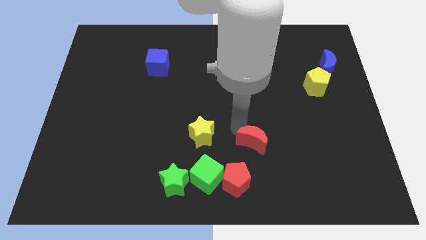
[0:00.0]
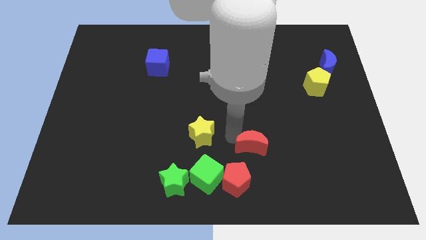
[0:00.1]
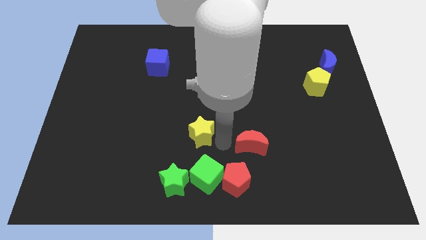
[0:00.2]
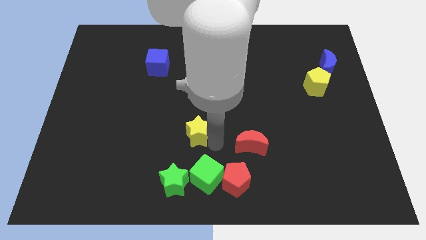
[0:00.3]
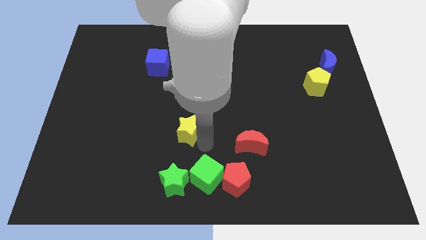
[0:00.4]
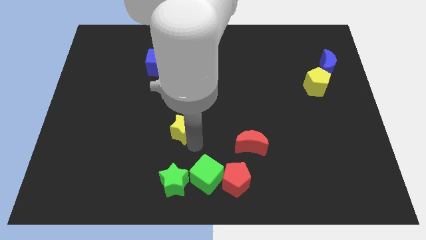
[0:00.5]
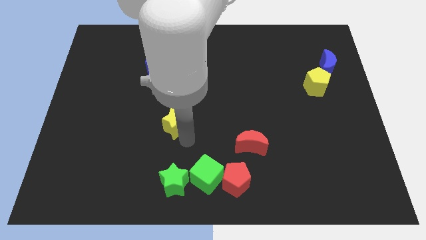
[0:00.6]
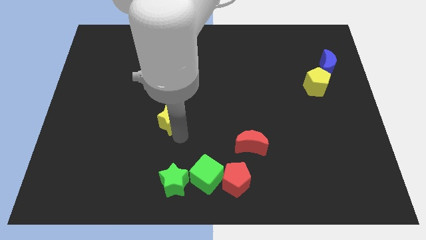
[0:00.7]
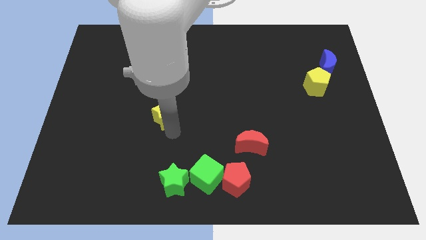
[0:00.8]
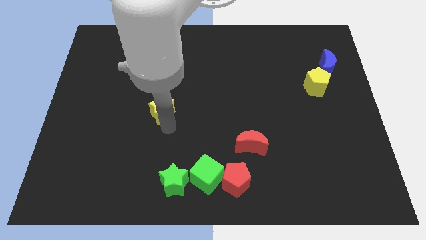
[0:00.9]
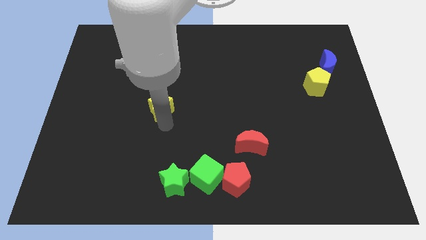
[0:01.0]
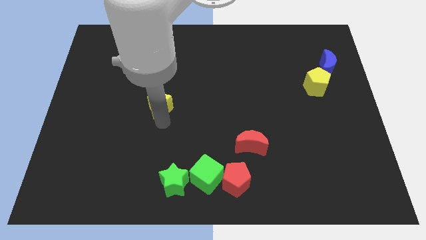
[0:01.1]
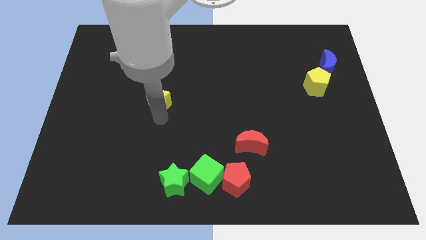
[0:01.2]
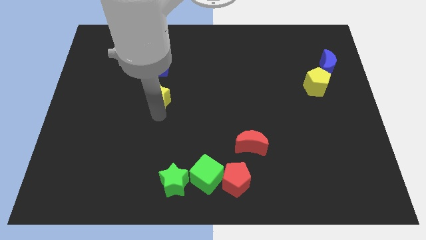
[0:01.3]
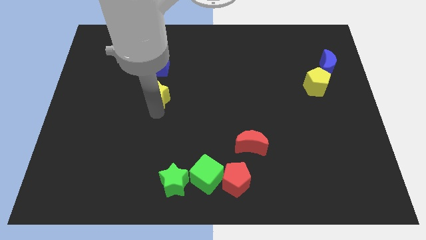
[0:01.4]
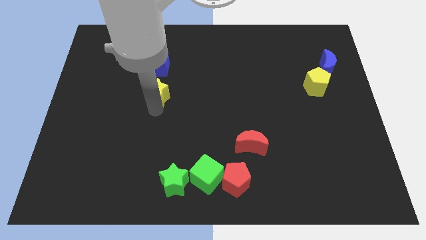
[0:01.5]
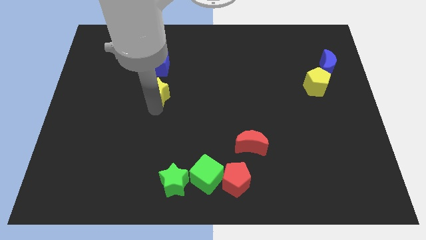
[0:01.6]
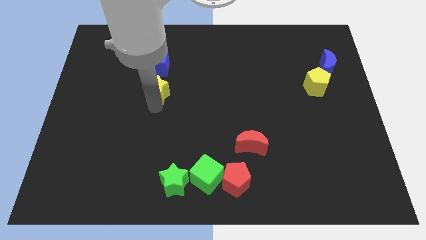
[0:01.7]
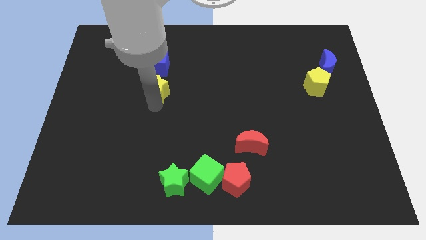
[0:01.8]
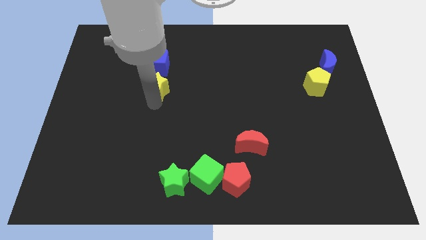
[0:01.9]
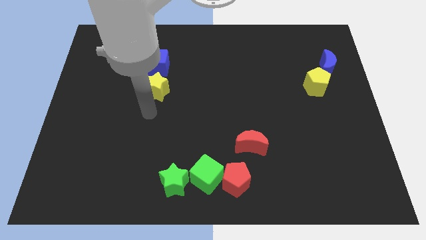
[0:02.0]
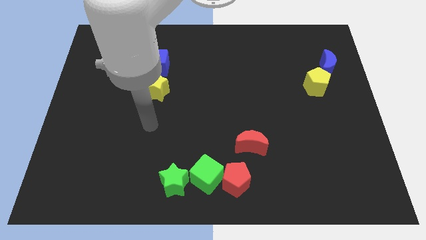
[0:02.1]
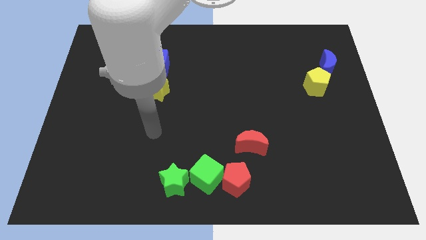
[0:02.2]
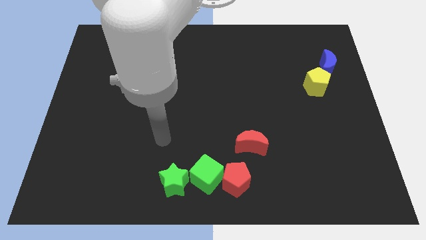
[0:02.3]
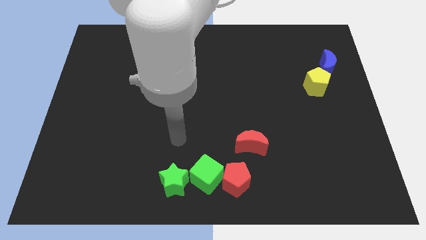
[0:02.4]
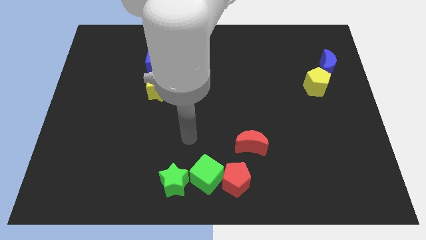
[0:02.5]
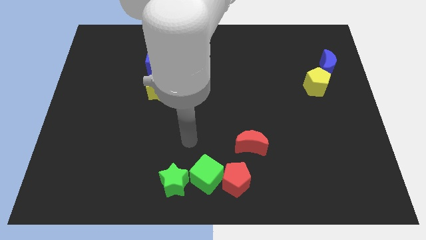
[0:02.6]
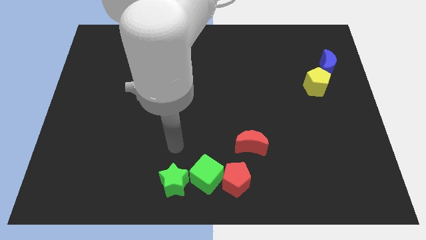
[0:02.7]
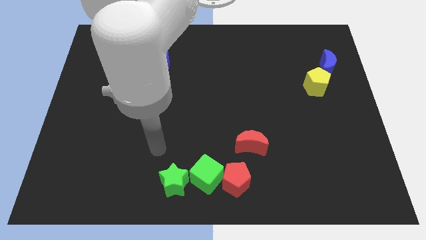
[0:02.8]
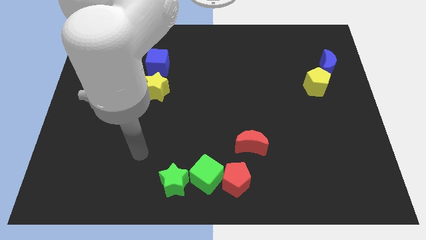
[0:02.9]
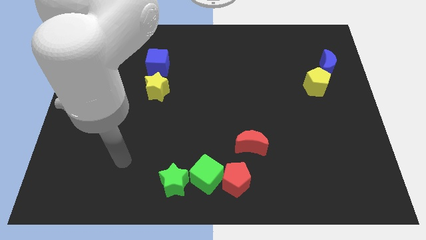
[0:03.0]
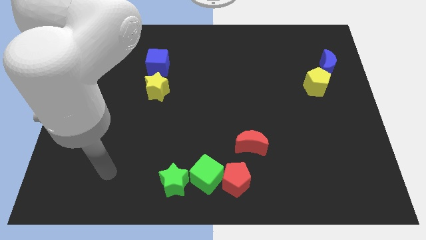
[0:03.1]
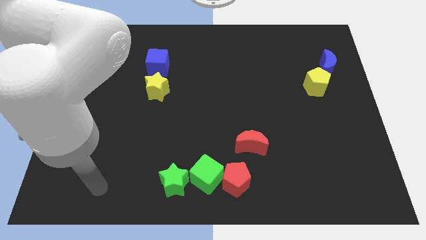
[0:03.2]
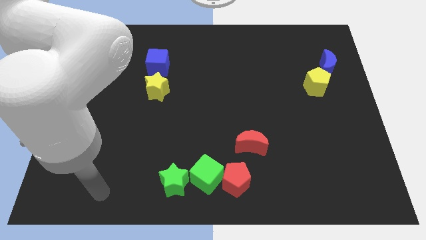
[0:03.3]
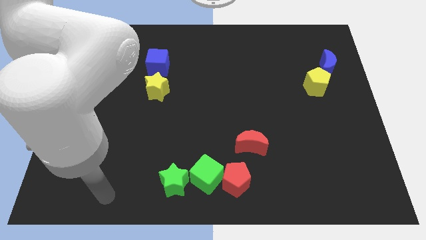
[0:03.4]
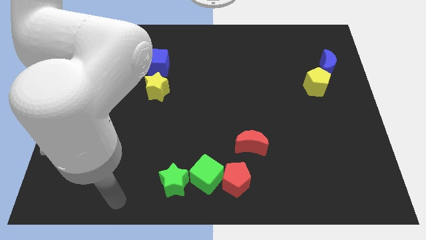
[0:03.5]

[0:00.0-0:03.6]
push the yellow star below the blue cube

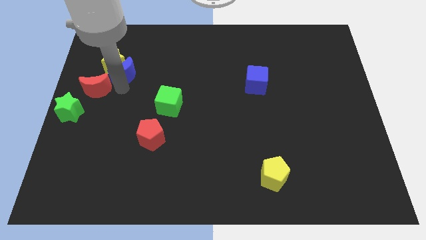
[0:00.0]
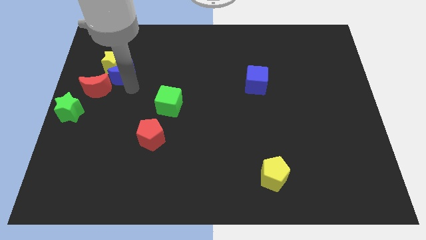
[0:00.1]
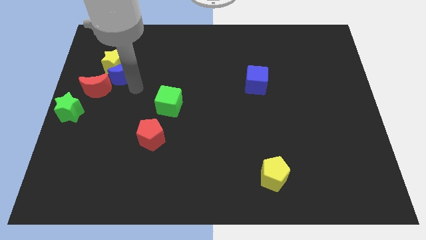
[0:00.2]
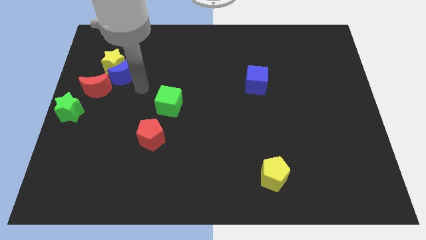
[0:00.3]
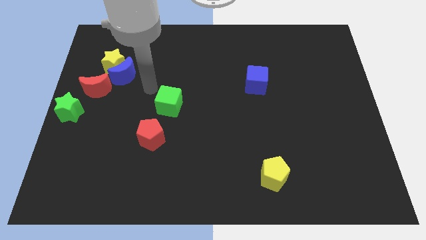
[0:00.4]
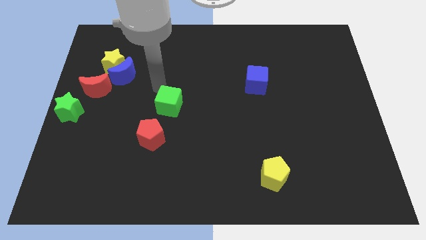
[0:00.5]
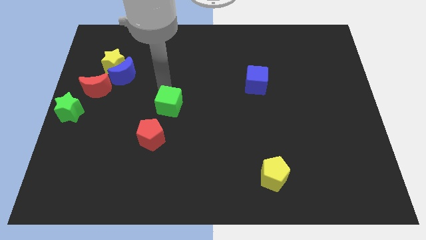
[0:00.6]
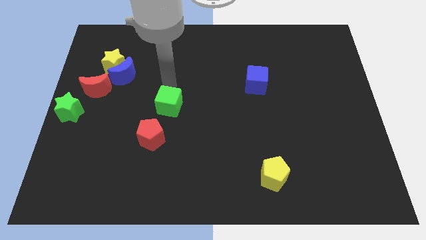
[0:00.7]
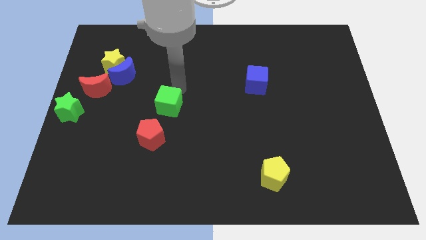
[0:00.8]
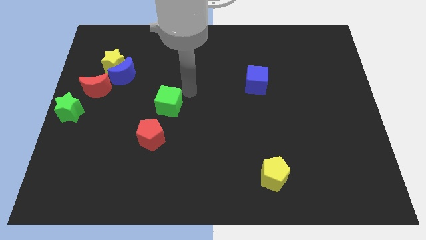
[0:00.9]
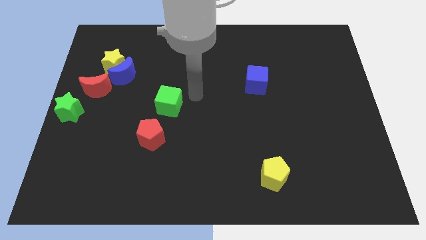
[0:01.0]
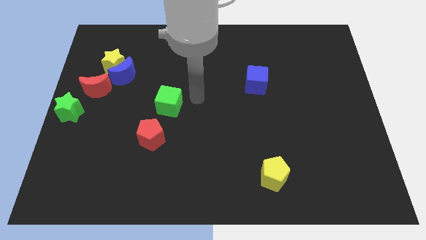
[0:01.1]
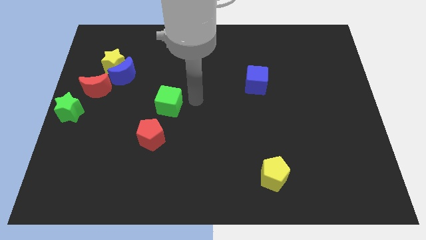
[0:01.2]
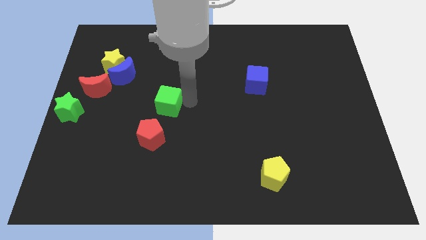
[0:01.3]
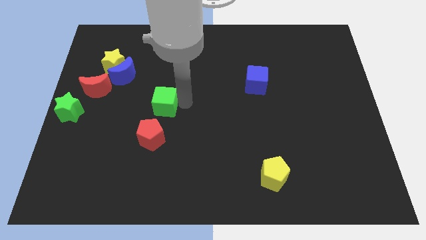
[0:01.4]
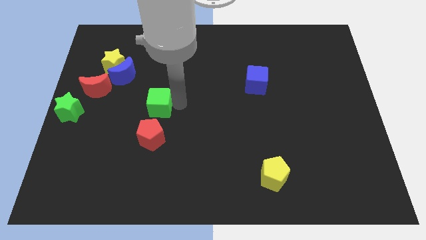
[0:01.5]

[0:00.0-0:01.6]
place your arm to the right of the green cube

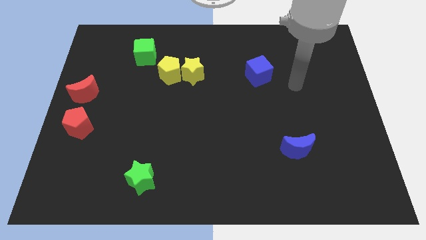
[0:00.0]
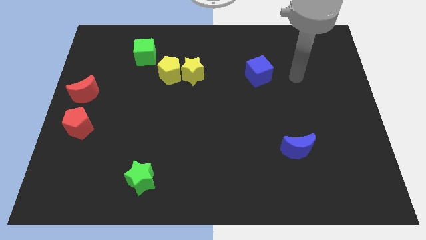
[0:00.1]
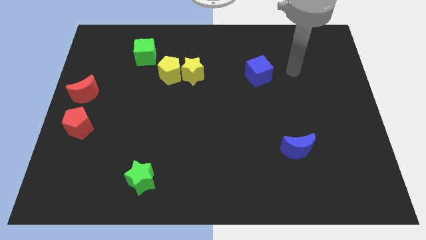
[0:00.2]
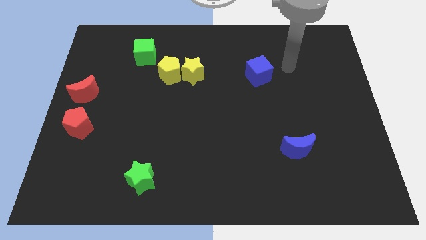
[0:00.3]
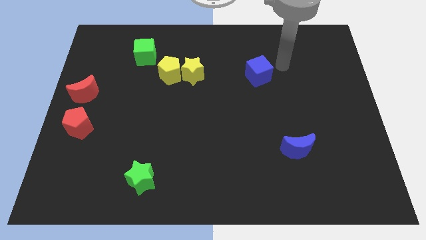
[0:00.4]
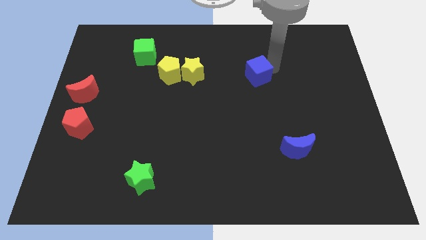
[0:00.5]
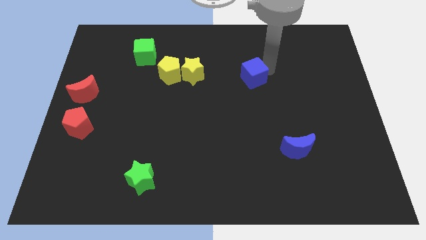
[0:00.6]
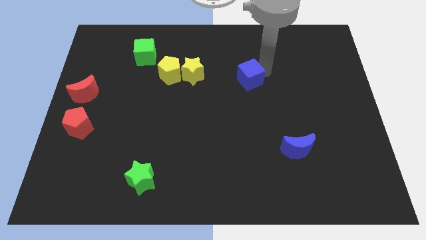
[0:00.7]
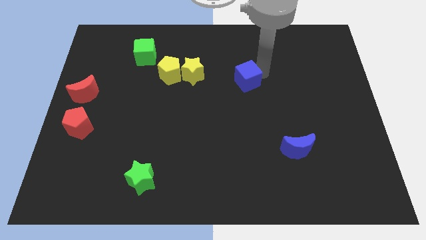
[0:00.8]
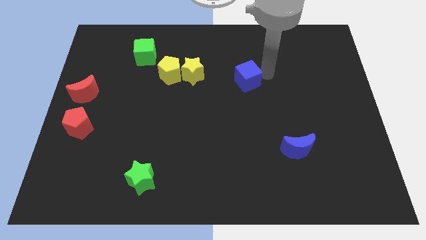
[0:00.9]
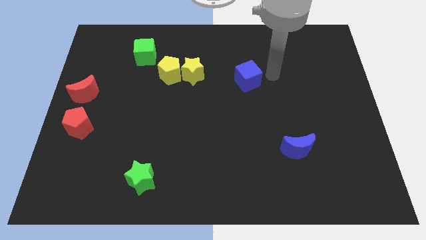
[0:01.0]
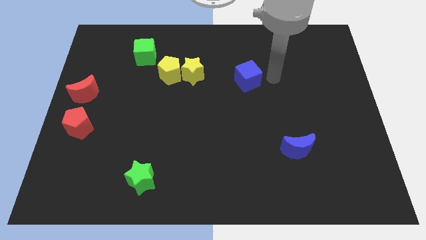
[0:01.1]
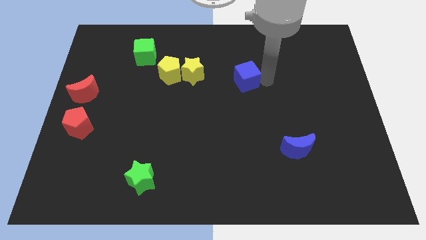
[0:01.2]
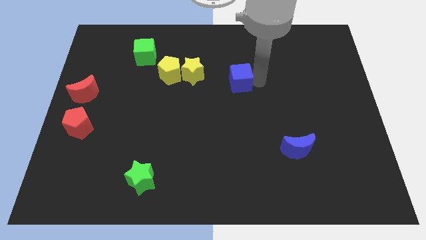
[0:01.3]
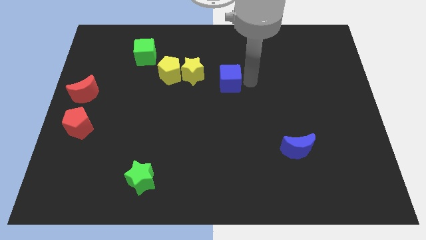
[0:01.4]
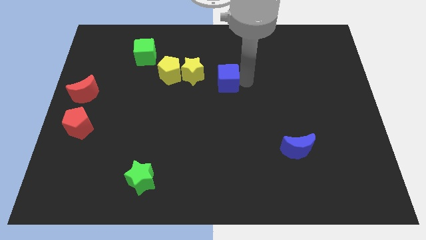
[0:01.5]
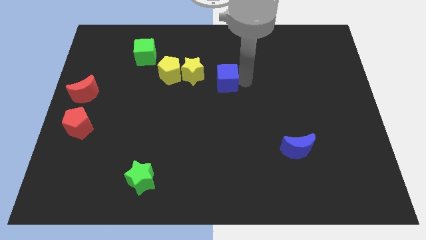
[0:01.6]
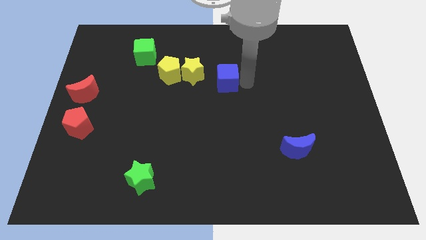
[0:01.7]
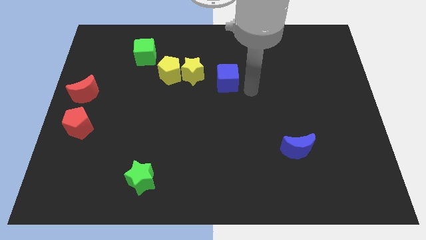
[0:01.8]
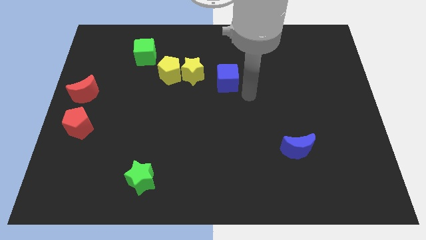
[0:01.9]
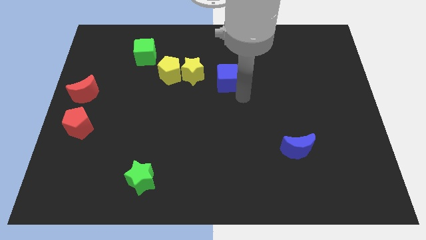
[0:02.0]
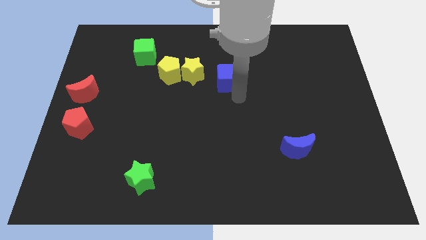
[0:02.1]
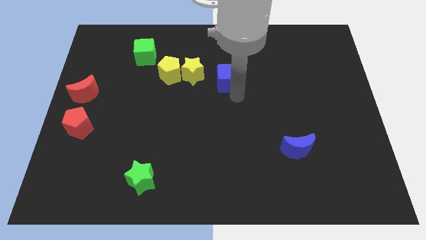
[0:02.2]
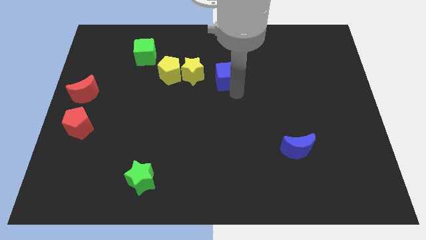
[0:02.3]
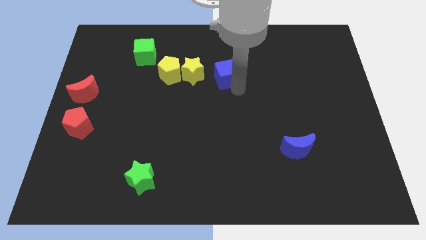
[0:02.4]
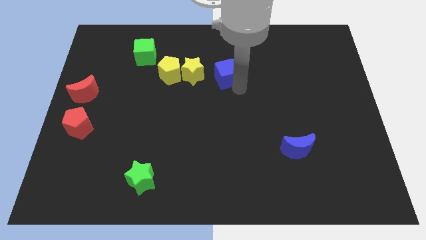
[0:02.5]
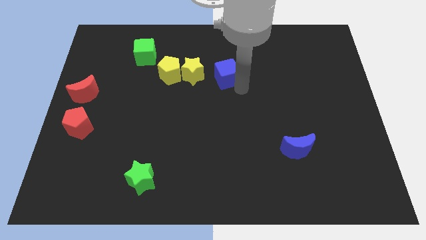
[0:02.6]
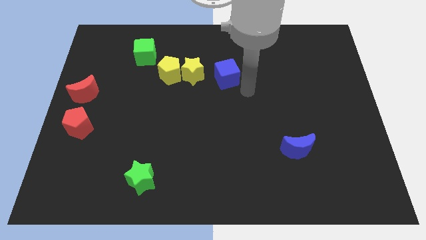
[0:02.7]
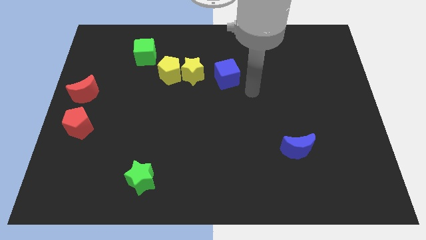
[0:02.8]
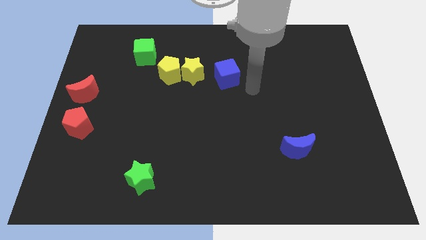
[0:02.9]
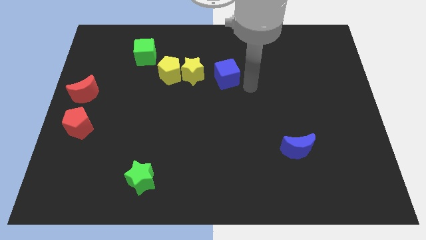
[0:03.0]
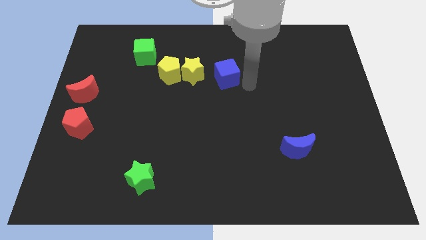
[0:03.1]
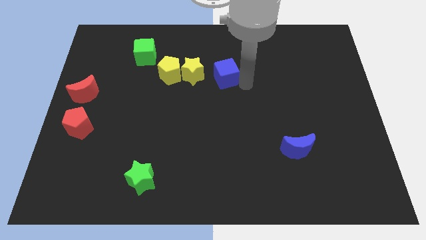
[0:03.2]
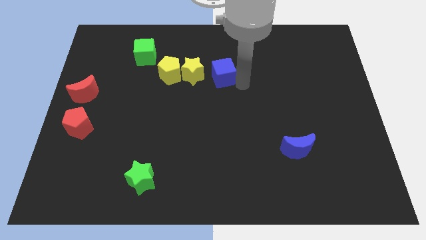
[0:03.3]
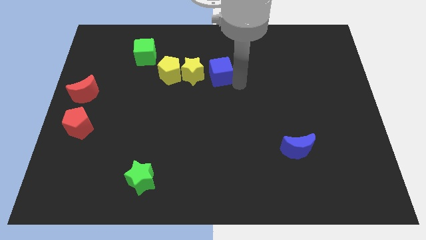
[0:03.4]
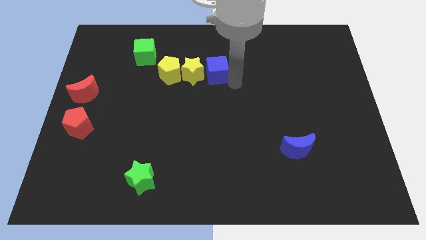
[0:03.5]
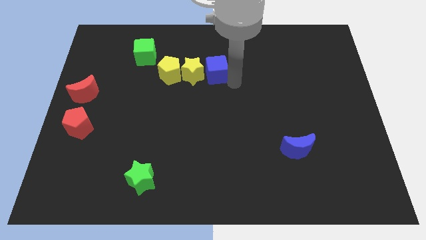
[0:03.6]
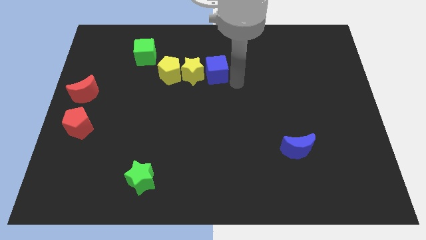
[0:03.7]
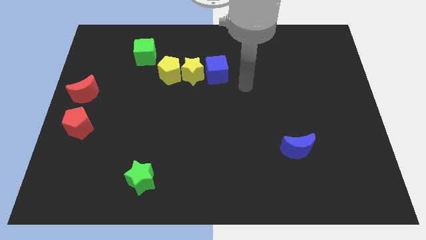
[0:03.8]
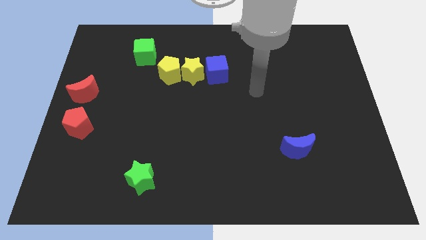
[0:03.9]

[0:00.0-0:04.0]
put the blue cube to the right side of the yellow star
